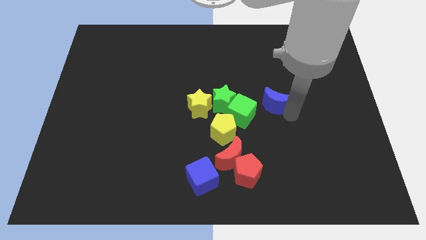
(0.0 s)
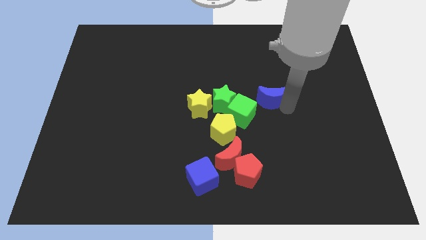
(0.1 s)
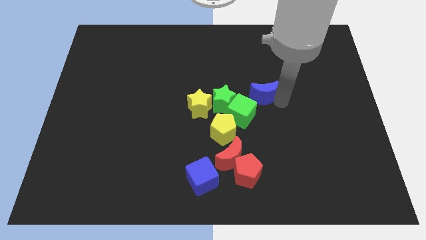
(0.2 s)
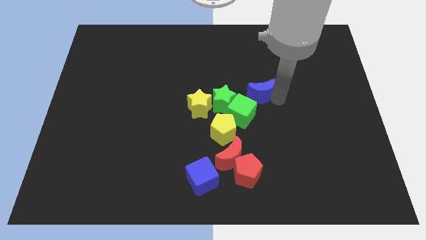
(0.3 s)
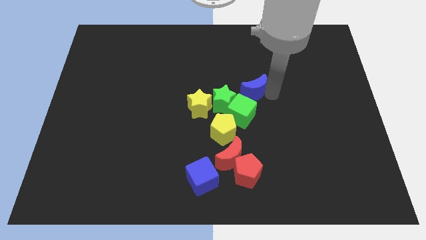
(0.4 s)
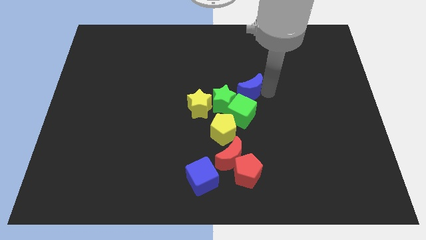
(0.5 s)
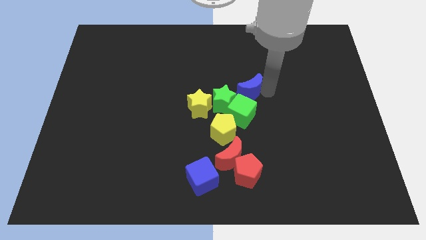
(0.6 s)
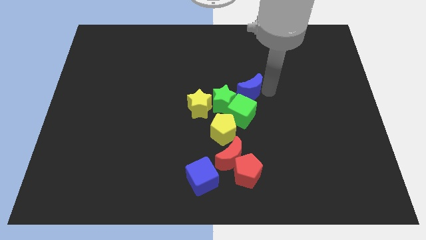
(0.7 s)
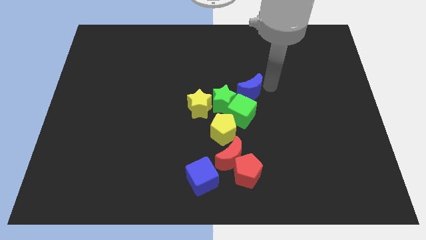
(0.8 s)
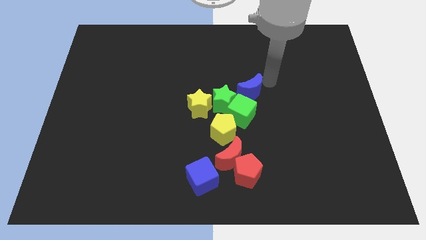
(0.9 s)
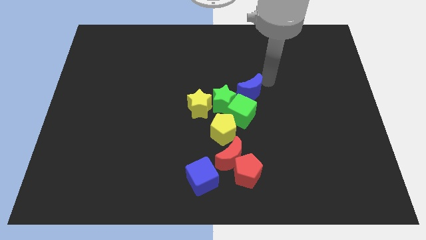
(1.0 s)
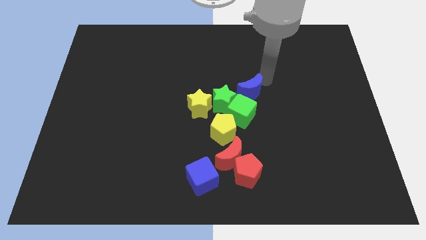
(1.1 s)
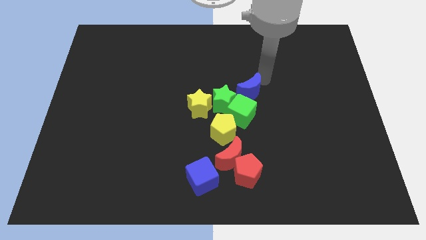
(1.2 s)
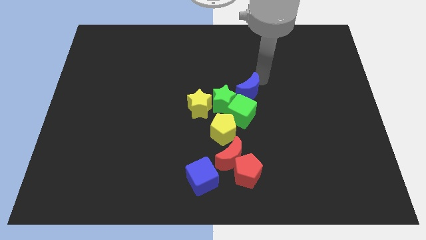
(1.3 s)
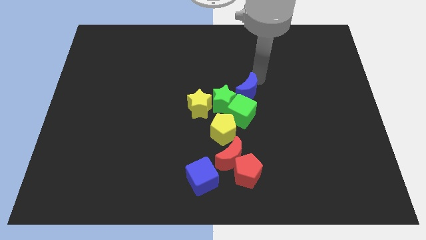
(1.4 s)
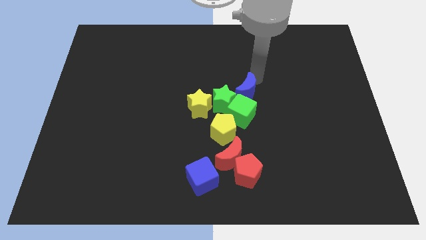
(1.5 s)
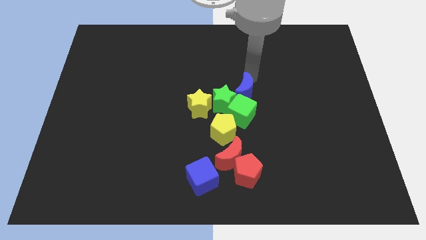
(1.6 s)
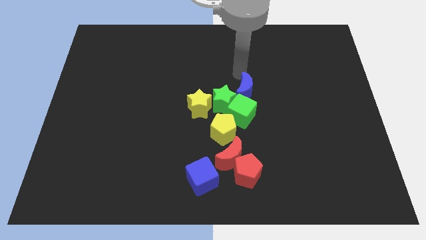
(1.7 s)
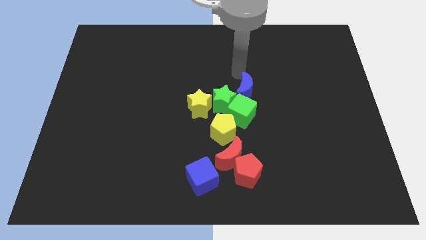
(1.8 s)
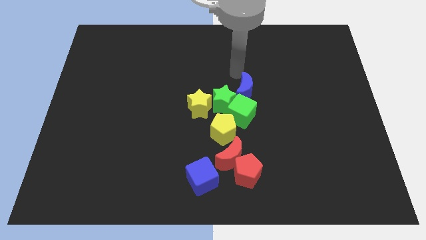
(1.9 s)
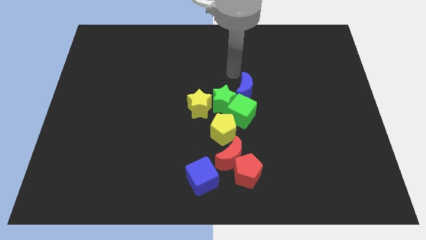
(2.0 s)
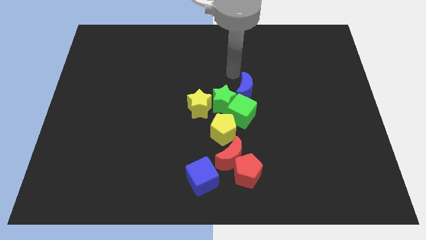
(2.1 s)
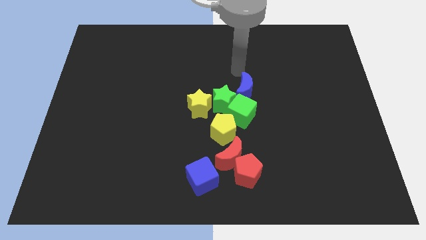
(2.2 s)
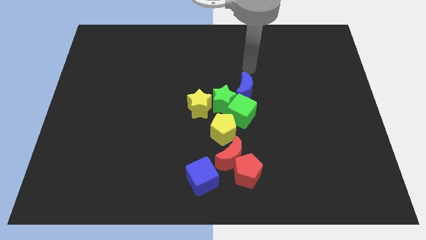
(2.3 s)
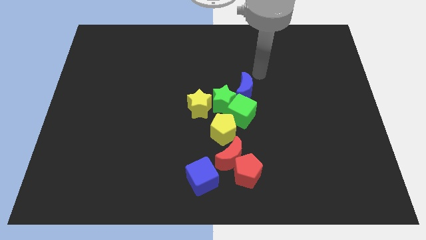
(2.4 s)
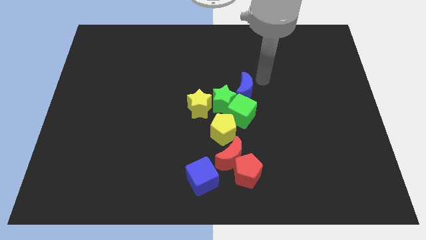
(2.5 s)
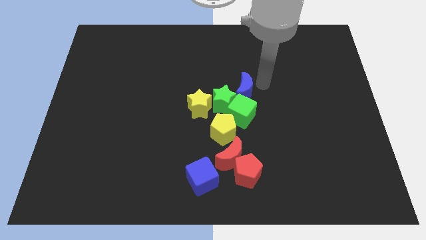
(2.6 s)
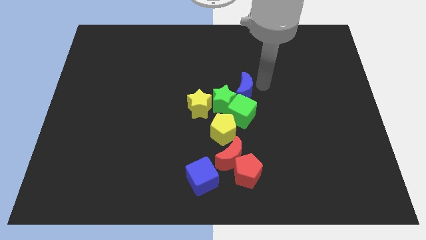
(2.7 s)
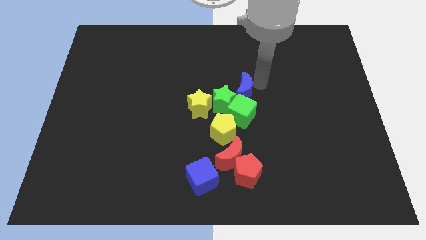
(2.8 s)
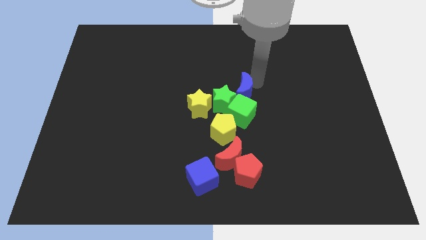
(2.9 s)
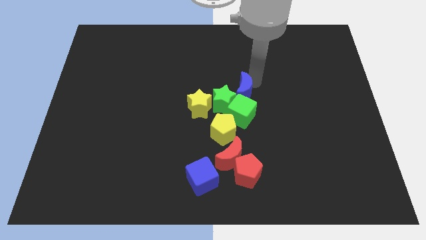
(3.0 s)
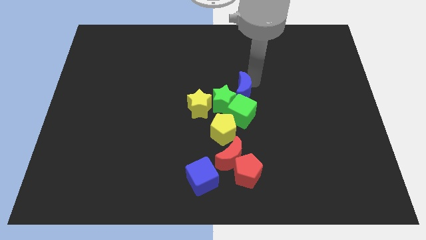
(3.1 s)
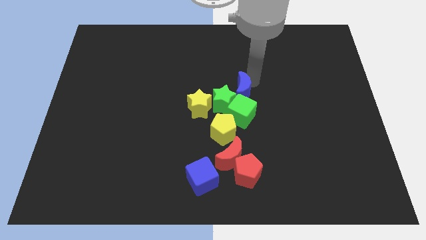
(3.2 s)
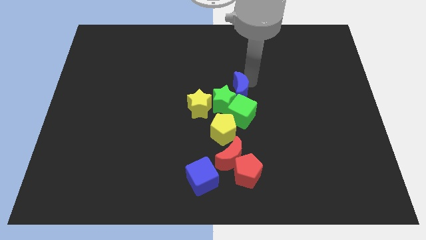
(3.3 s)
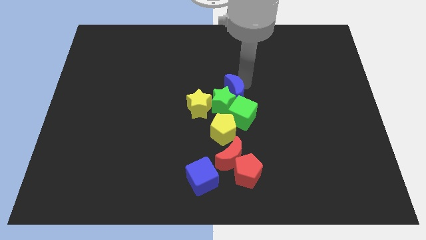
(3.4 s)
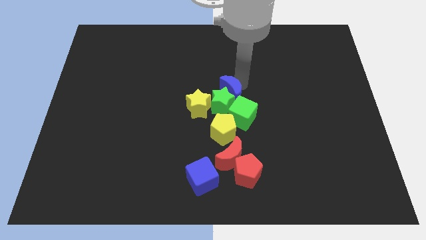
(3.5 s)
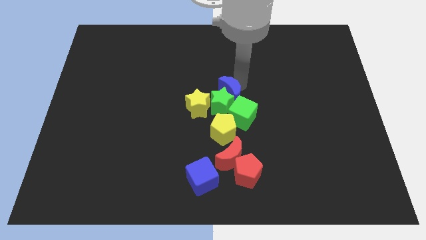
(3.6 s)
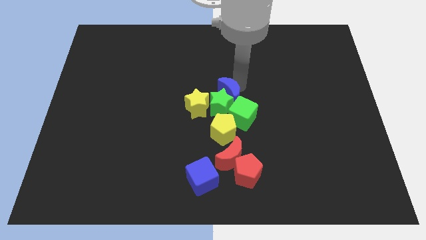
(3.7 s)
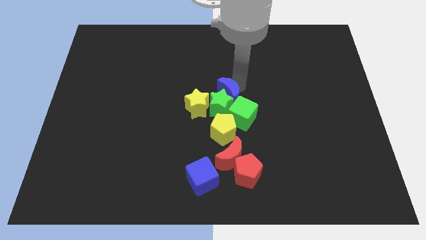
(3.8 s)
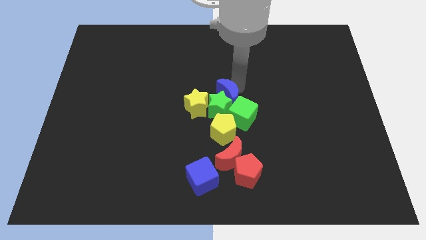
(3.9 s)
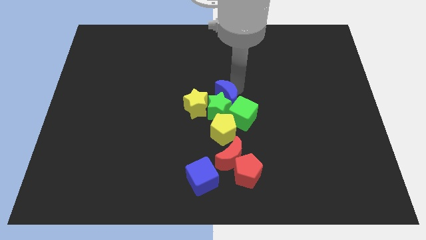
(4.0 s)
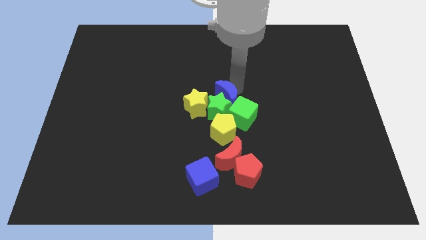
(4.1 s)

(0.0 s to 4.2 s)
place the blue moon at the center of the board

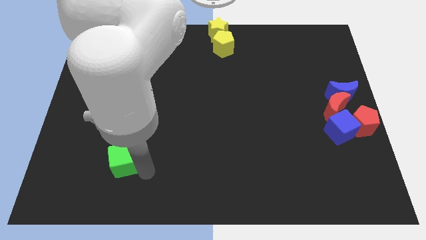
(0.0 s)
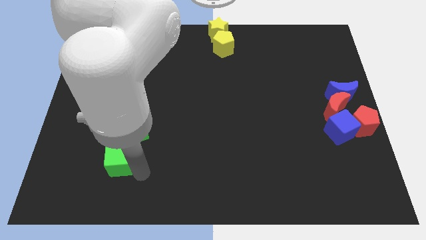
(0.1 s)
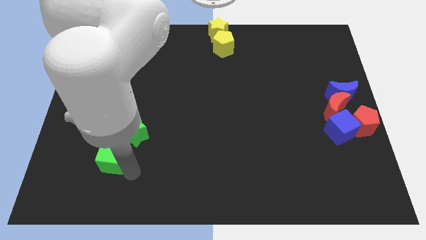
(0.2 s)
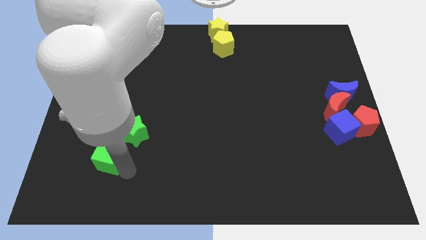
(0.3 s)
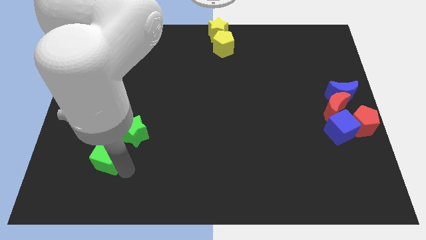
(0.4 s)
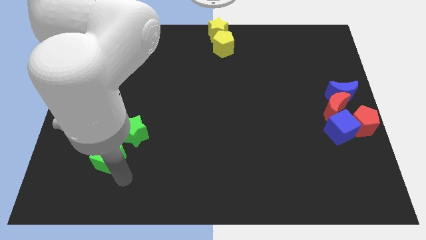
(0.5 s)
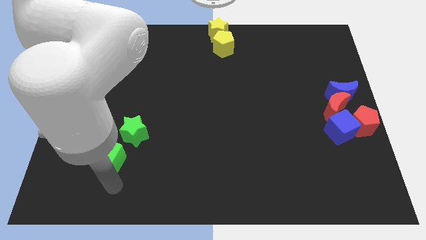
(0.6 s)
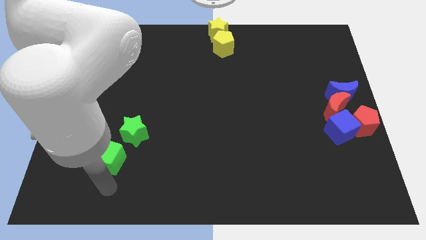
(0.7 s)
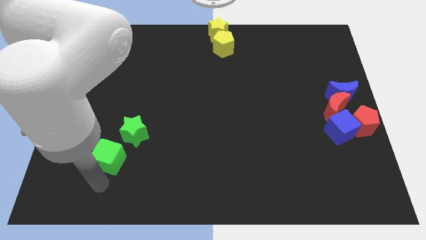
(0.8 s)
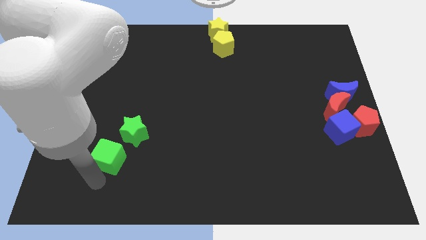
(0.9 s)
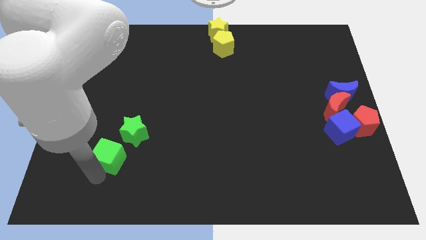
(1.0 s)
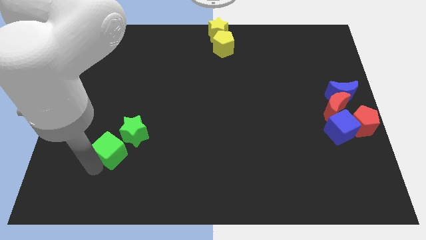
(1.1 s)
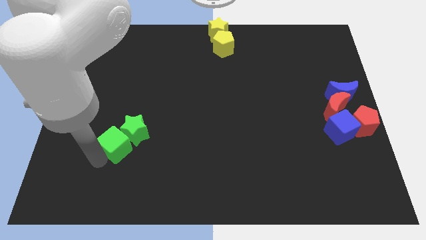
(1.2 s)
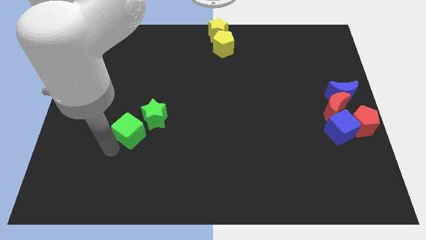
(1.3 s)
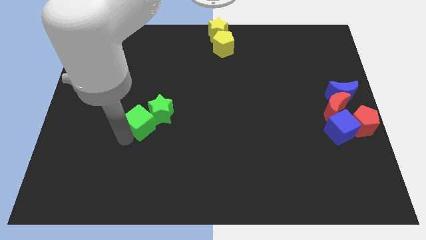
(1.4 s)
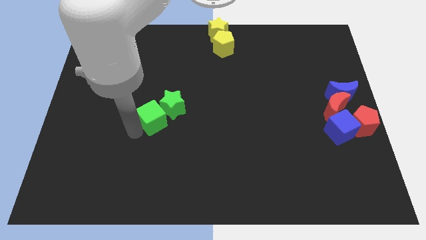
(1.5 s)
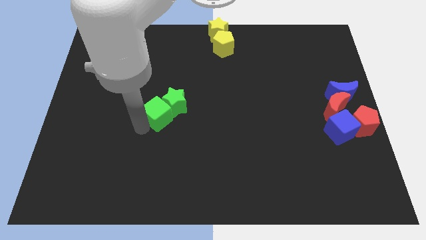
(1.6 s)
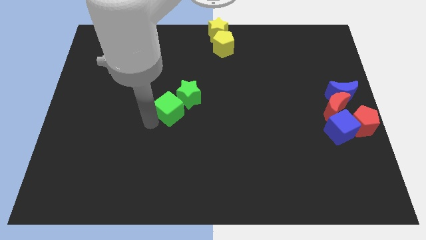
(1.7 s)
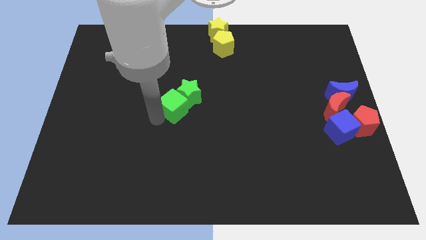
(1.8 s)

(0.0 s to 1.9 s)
move the green cube into green star

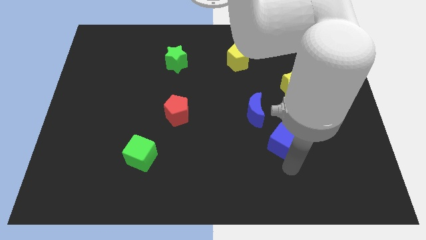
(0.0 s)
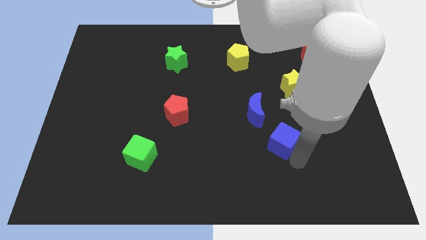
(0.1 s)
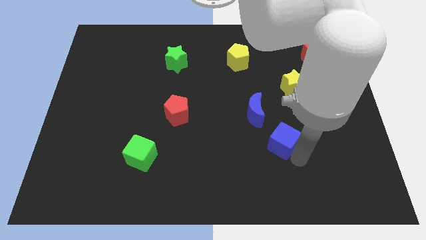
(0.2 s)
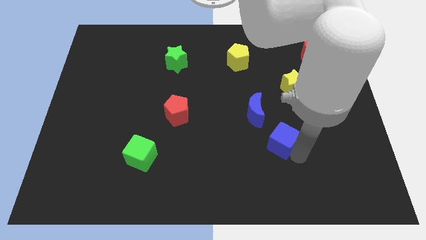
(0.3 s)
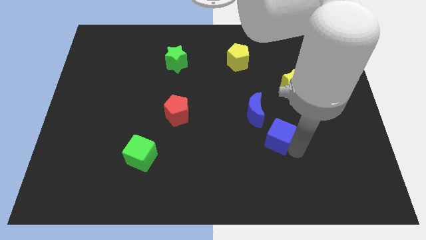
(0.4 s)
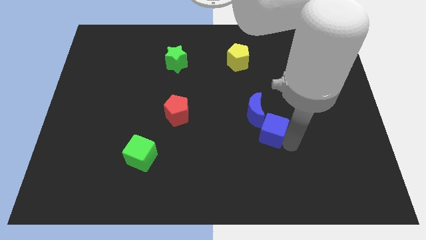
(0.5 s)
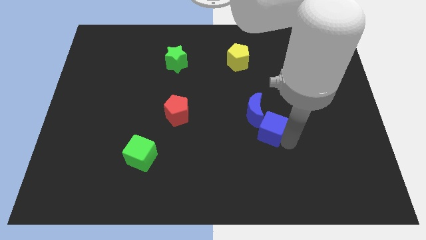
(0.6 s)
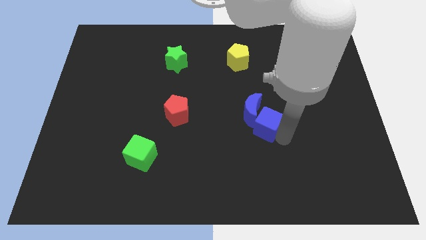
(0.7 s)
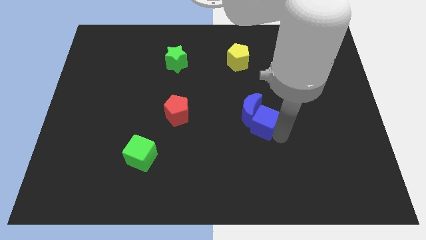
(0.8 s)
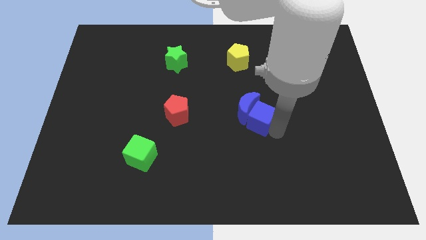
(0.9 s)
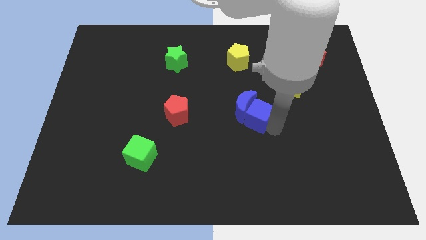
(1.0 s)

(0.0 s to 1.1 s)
push the blue cube into blue crescent

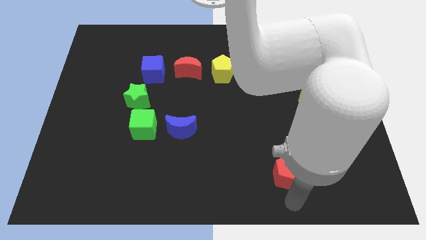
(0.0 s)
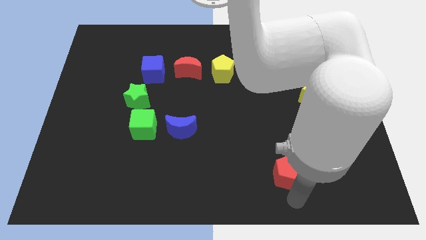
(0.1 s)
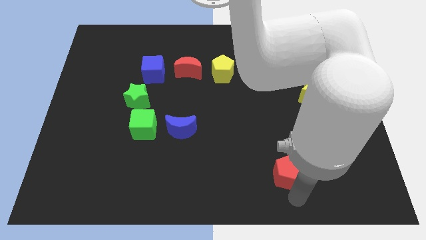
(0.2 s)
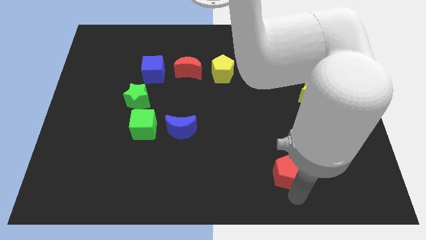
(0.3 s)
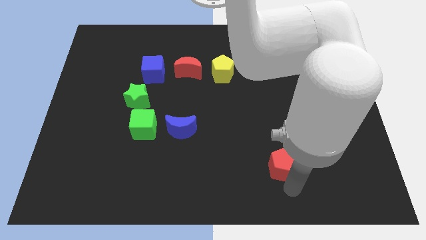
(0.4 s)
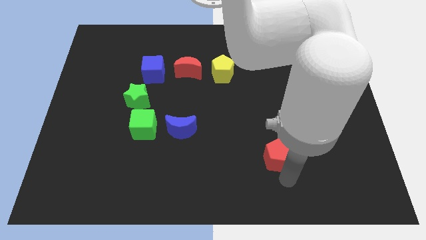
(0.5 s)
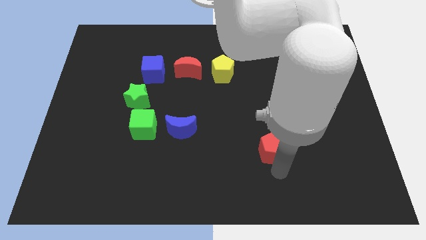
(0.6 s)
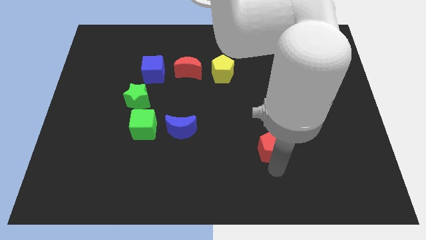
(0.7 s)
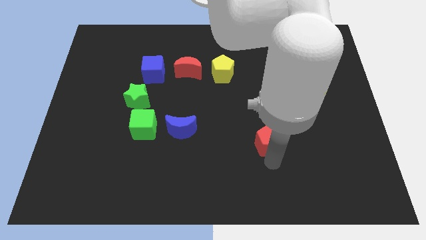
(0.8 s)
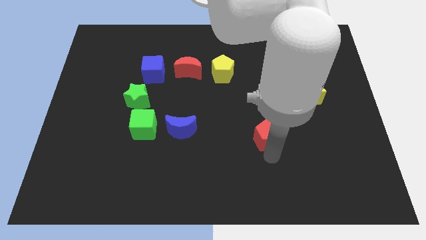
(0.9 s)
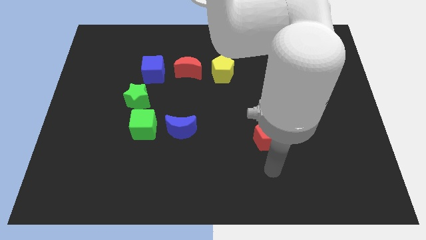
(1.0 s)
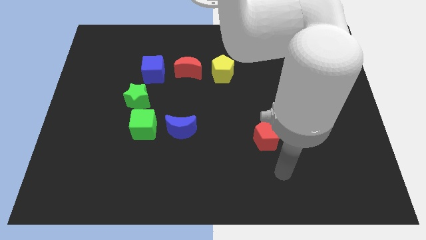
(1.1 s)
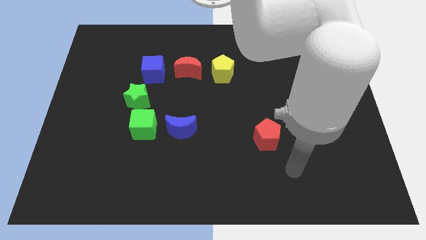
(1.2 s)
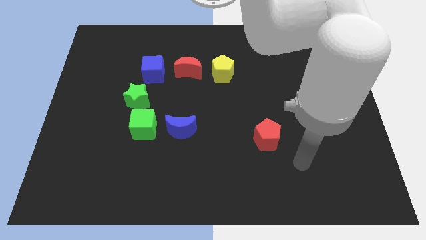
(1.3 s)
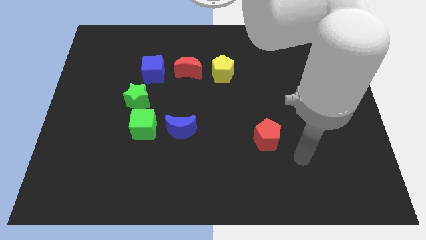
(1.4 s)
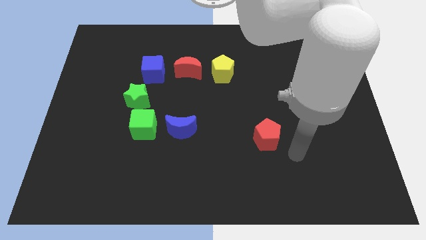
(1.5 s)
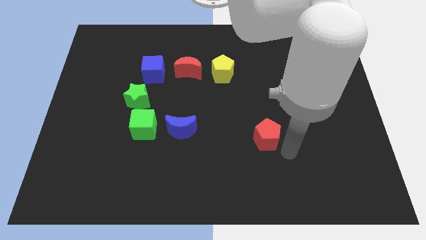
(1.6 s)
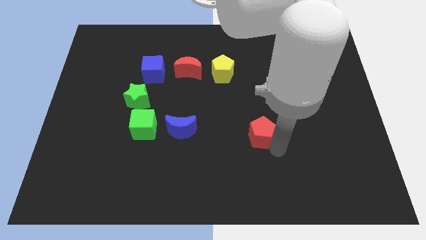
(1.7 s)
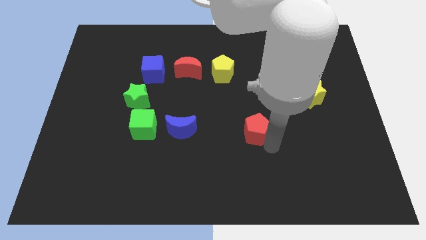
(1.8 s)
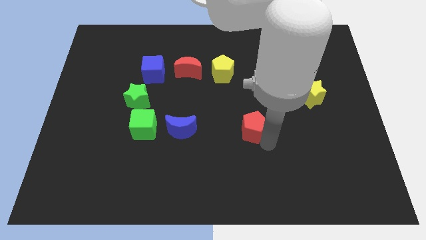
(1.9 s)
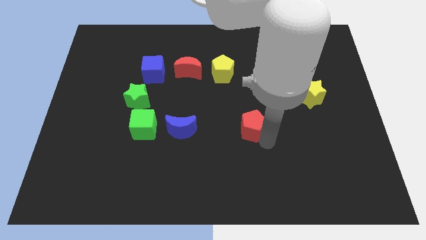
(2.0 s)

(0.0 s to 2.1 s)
place red pentagon to the right of blue moon
